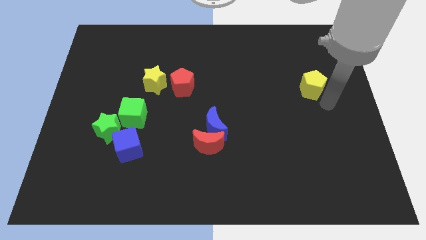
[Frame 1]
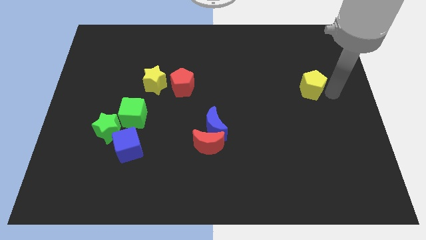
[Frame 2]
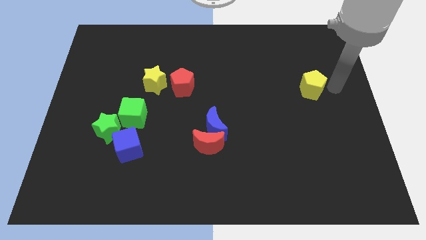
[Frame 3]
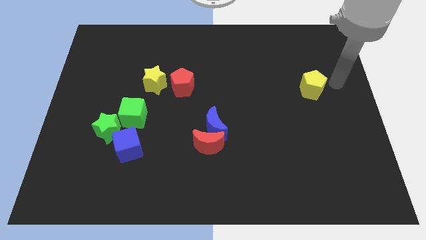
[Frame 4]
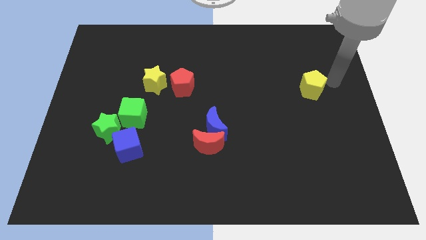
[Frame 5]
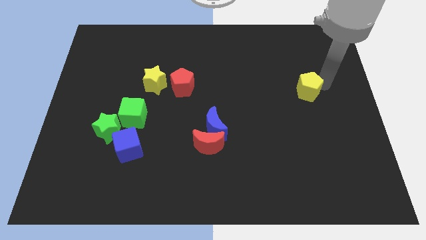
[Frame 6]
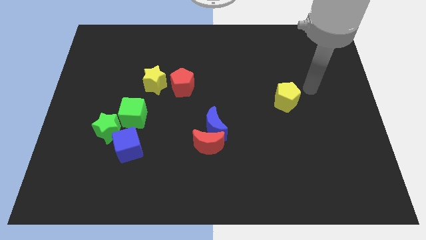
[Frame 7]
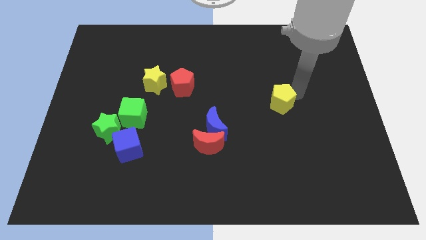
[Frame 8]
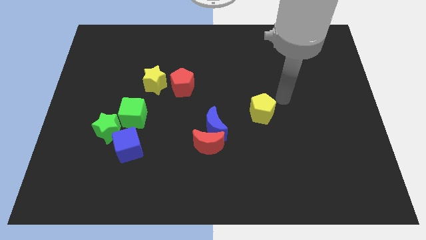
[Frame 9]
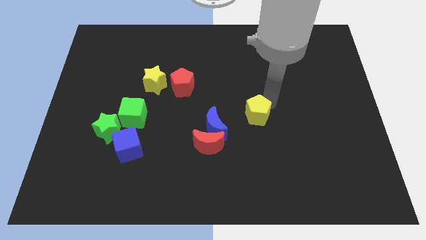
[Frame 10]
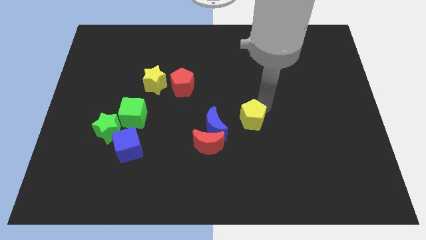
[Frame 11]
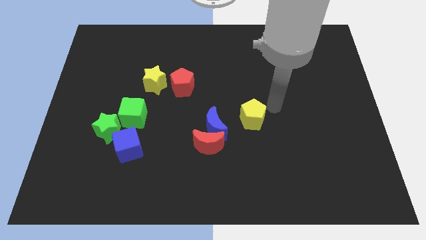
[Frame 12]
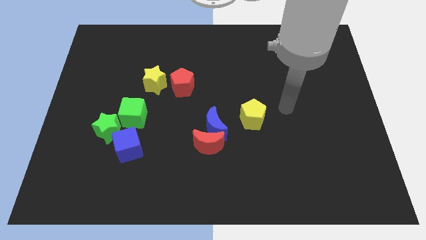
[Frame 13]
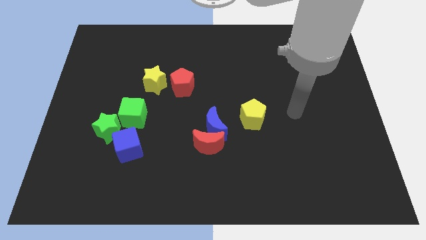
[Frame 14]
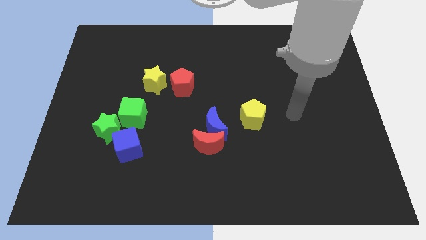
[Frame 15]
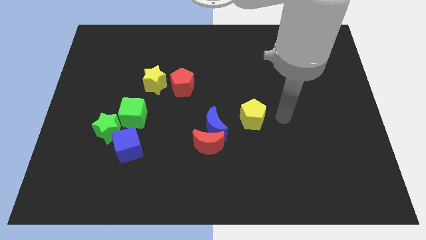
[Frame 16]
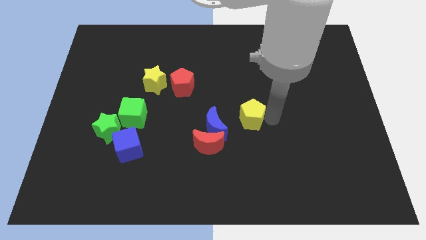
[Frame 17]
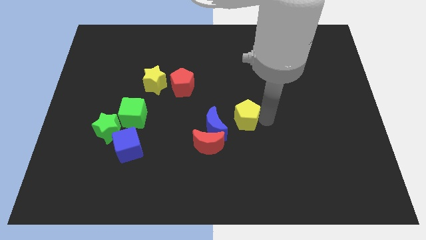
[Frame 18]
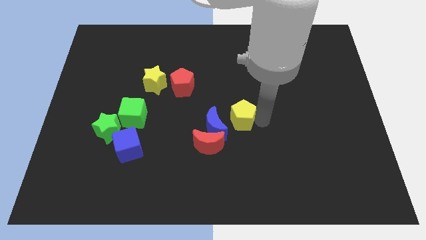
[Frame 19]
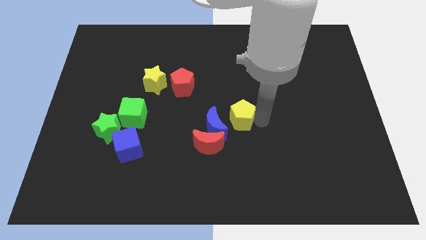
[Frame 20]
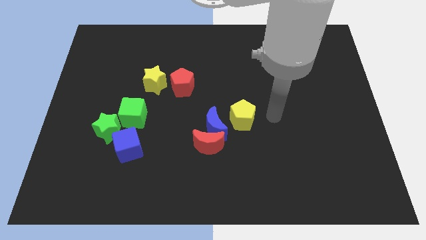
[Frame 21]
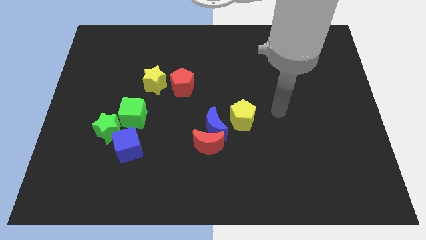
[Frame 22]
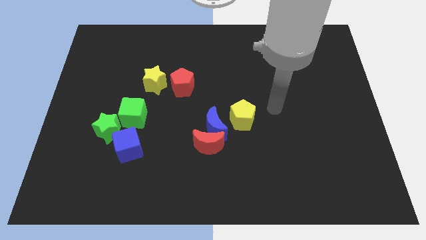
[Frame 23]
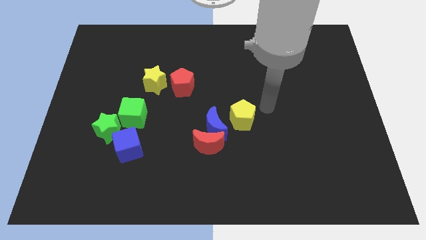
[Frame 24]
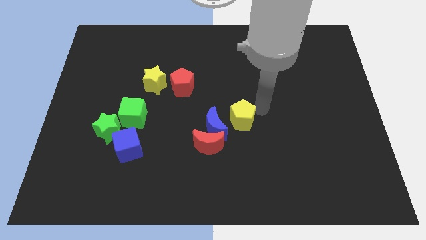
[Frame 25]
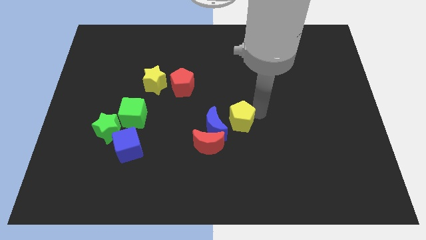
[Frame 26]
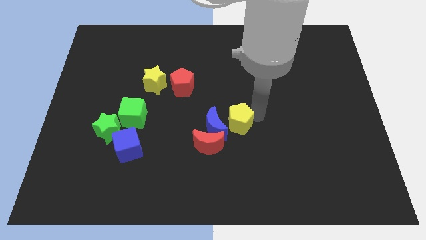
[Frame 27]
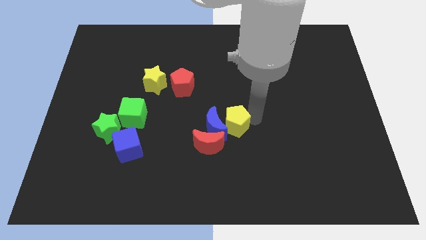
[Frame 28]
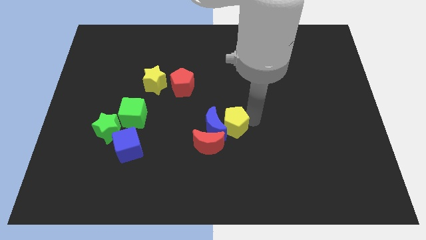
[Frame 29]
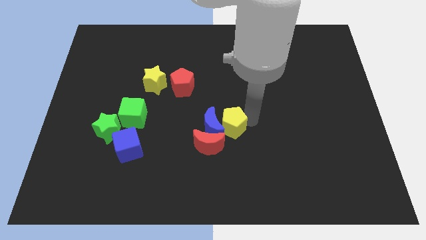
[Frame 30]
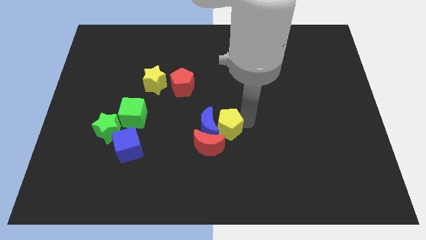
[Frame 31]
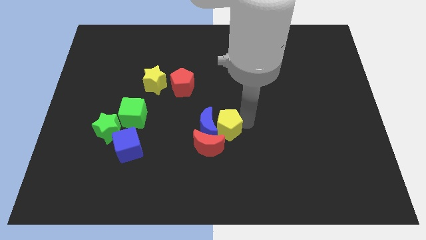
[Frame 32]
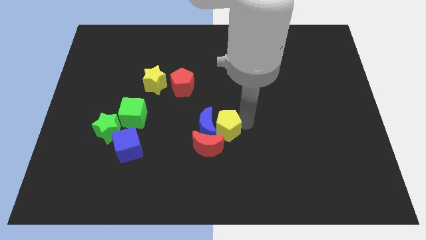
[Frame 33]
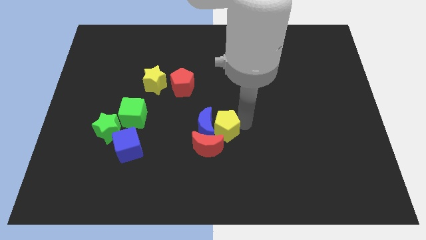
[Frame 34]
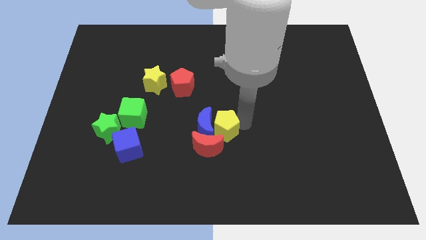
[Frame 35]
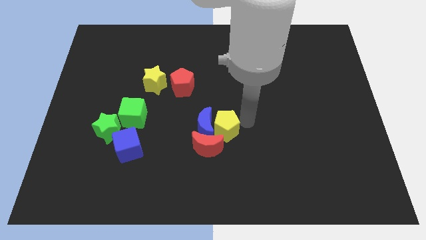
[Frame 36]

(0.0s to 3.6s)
place the yellow pentagon at the right side of the blue moon

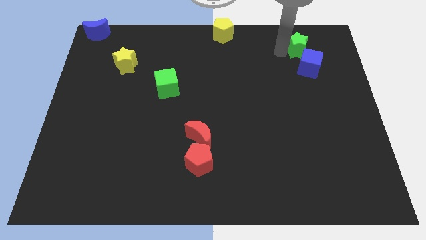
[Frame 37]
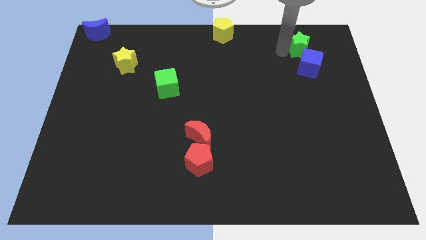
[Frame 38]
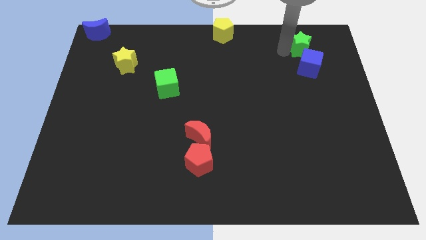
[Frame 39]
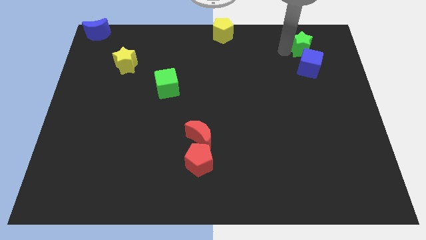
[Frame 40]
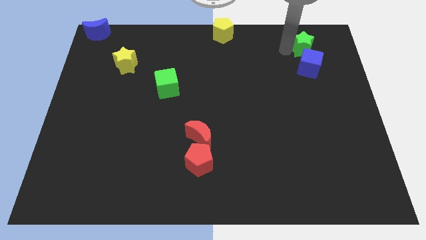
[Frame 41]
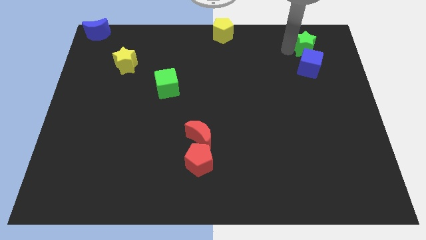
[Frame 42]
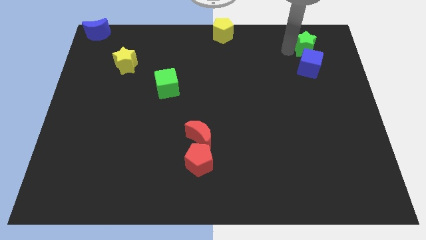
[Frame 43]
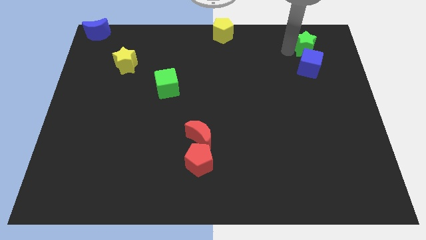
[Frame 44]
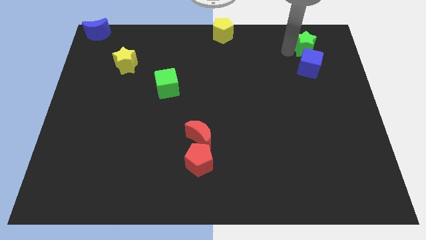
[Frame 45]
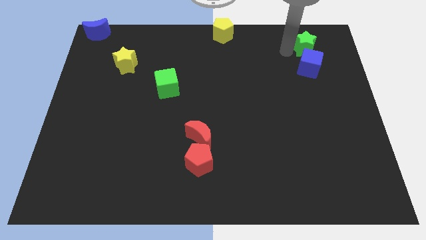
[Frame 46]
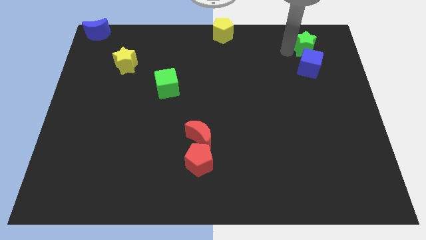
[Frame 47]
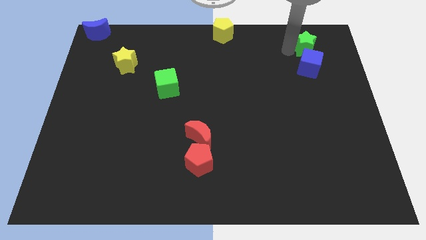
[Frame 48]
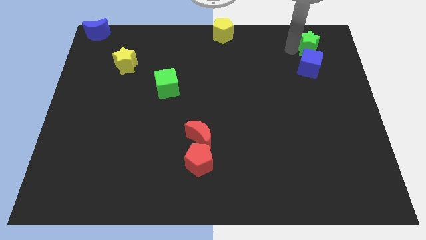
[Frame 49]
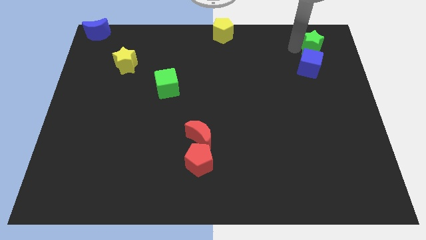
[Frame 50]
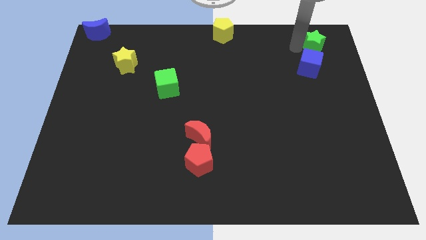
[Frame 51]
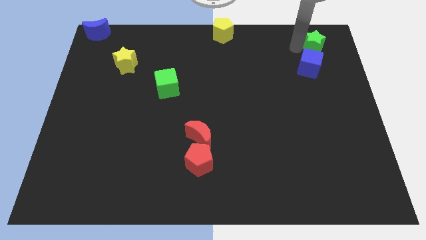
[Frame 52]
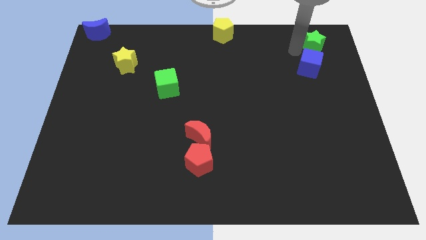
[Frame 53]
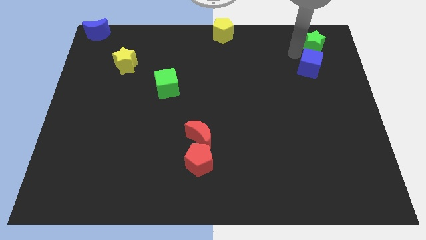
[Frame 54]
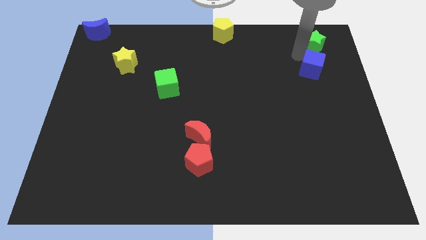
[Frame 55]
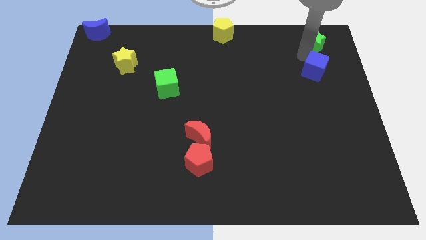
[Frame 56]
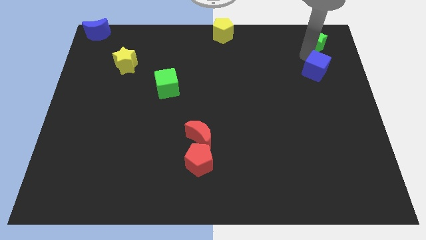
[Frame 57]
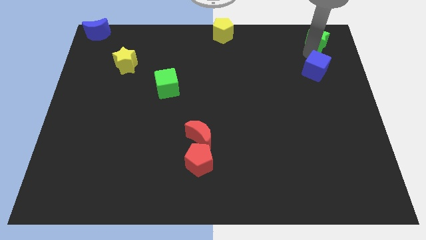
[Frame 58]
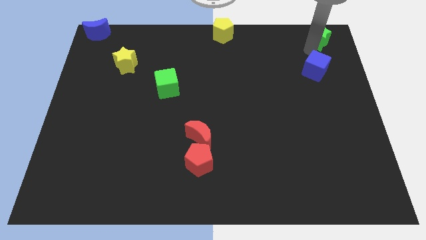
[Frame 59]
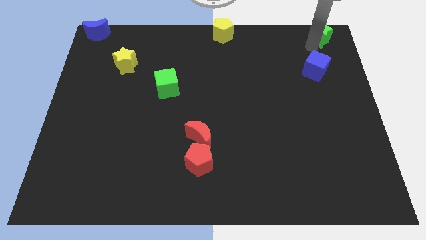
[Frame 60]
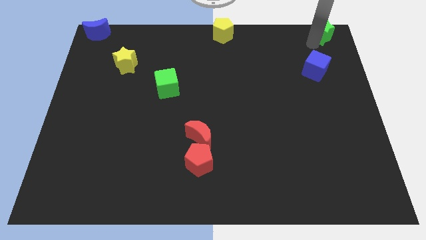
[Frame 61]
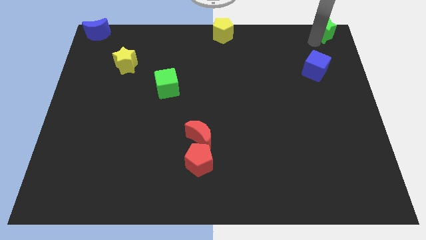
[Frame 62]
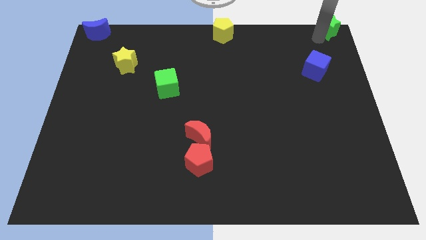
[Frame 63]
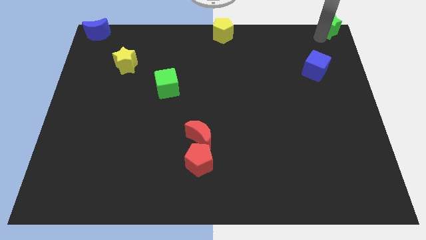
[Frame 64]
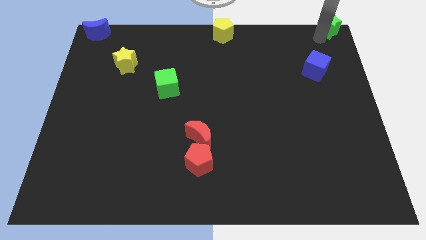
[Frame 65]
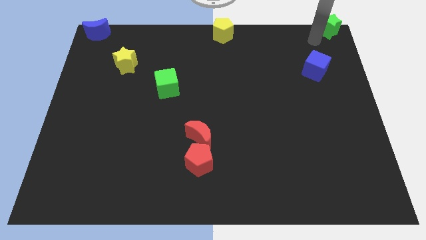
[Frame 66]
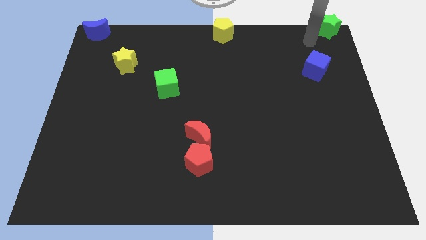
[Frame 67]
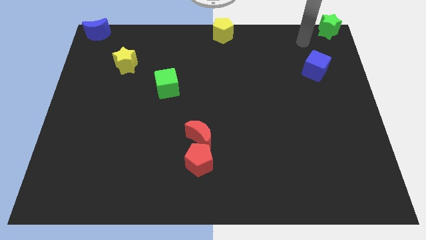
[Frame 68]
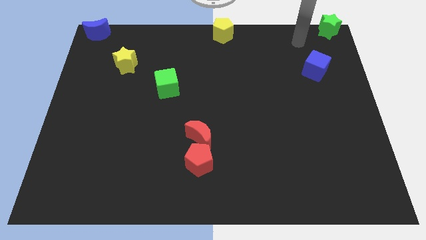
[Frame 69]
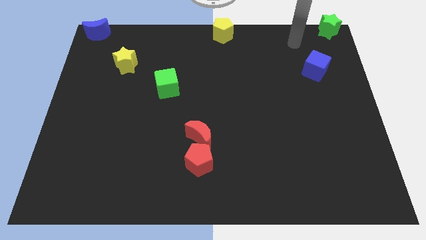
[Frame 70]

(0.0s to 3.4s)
push green star towards top right of the board

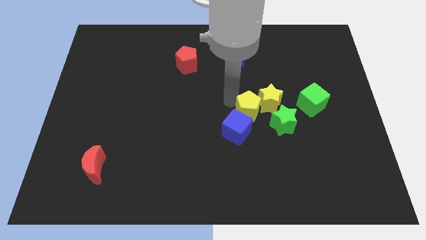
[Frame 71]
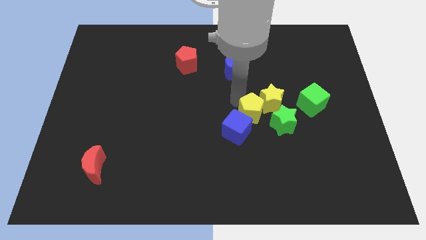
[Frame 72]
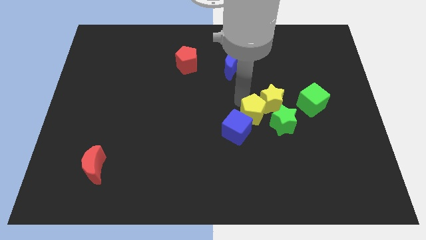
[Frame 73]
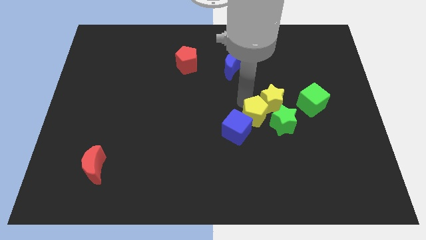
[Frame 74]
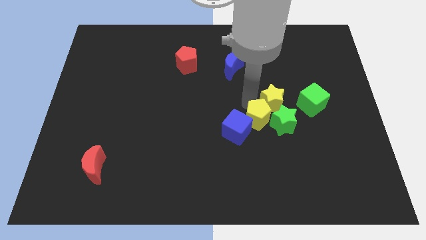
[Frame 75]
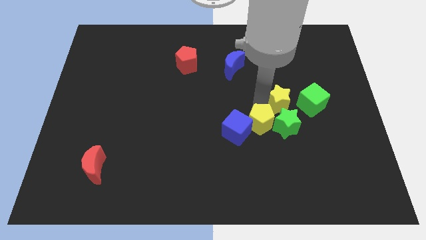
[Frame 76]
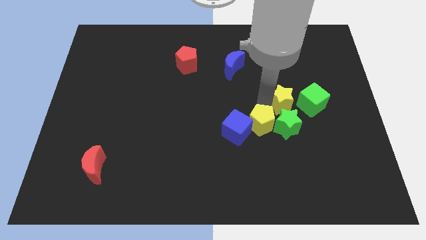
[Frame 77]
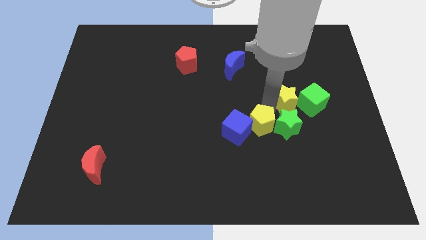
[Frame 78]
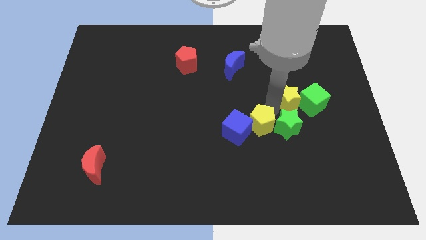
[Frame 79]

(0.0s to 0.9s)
push the yellow pentagon in between of green star and blue cube

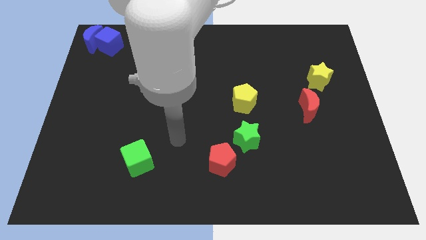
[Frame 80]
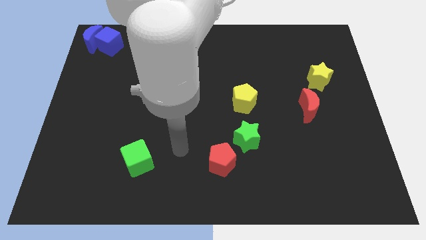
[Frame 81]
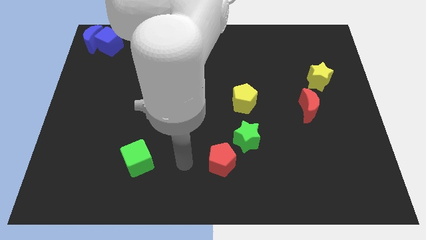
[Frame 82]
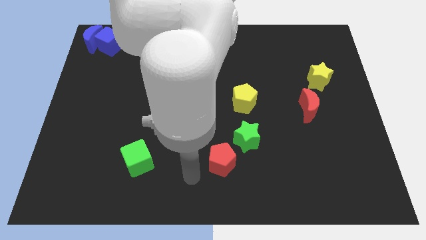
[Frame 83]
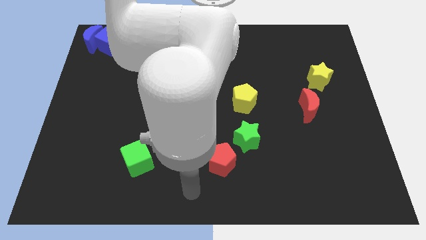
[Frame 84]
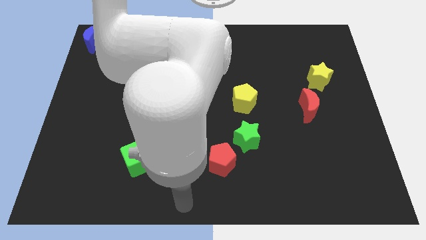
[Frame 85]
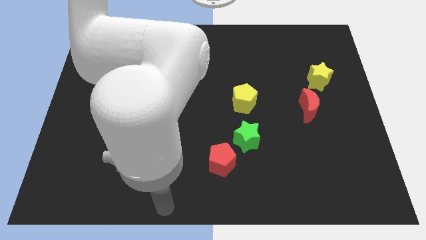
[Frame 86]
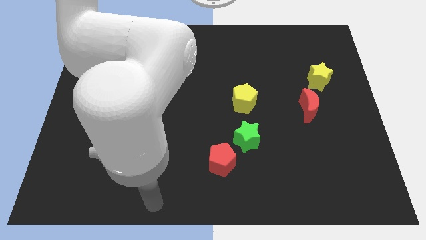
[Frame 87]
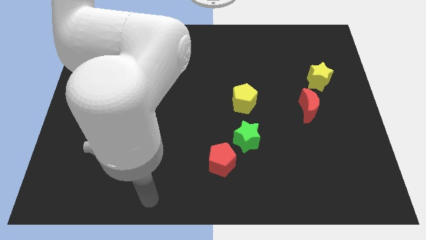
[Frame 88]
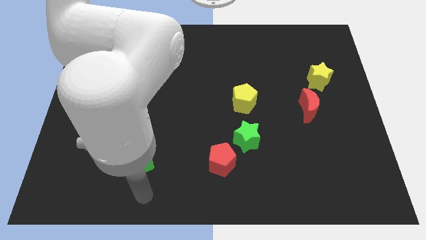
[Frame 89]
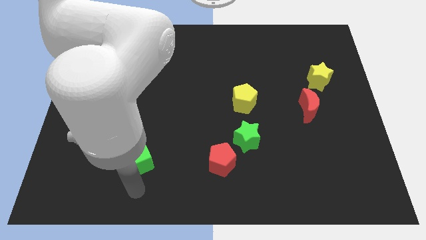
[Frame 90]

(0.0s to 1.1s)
place your arm at the bottom of the green cube
